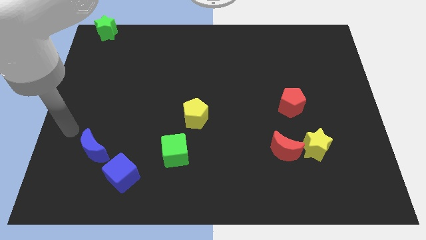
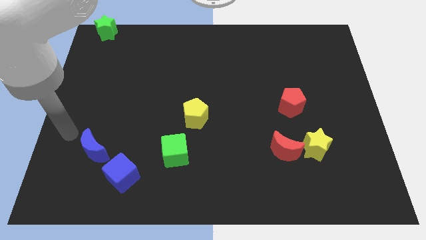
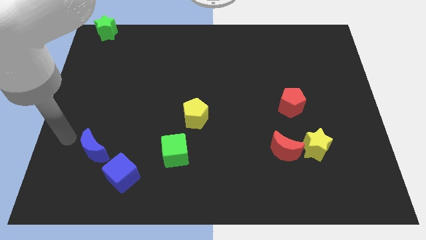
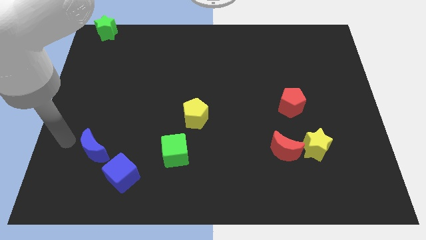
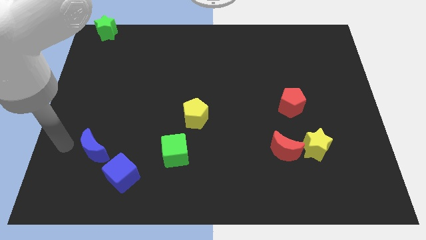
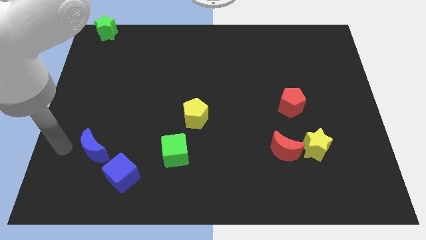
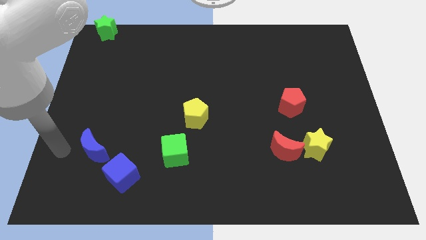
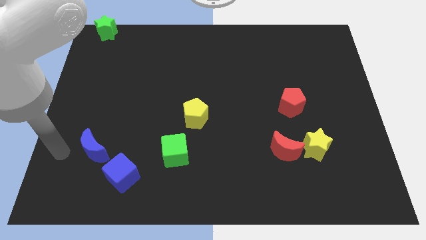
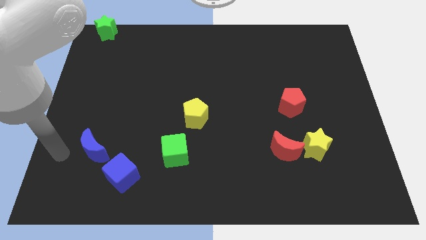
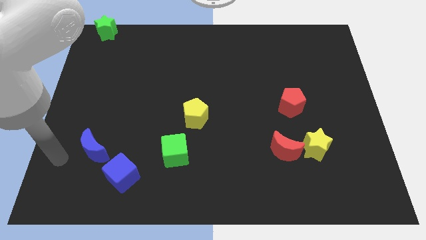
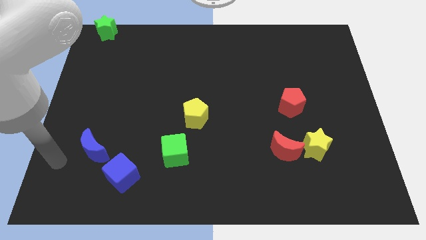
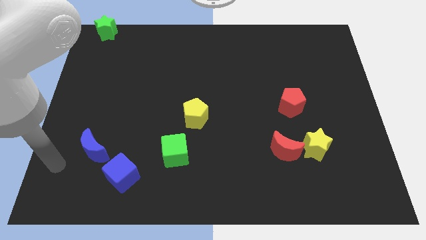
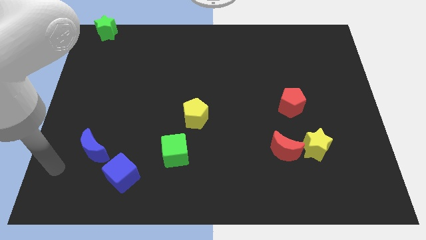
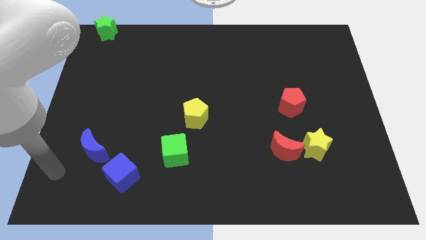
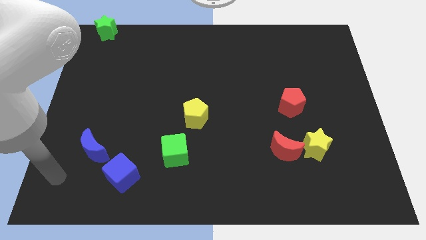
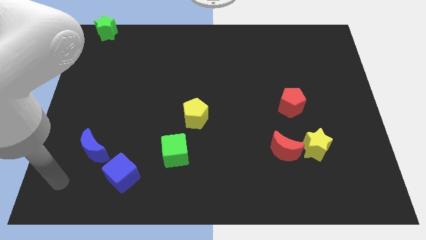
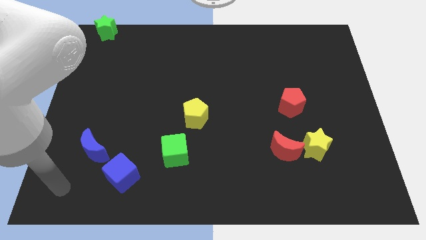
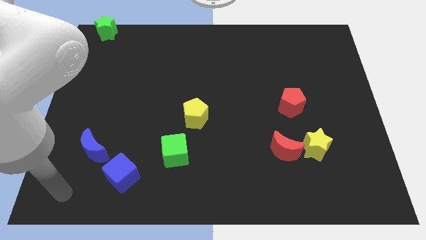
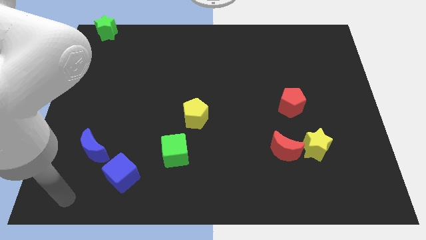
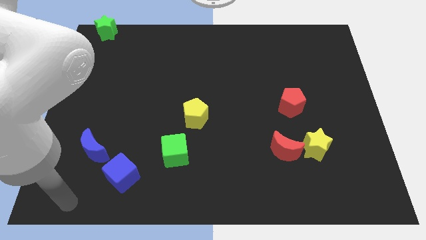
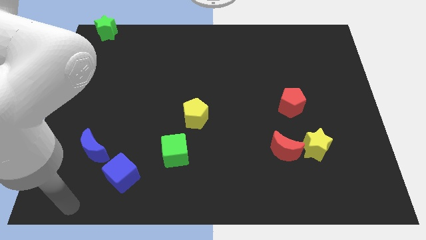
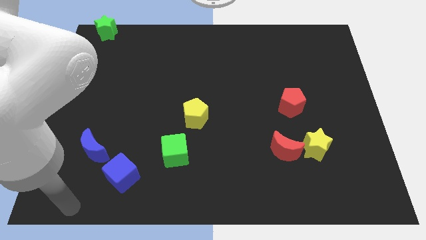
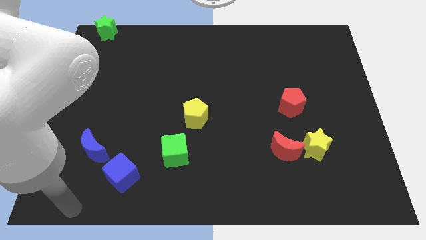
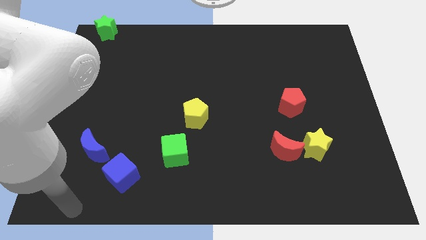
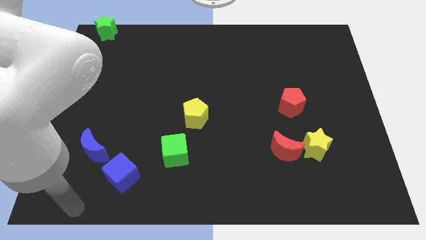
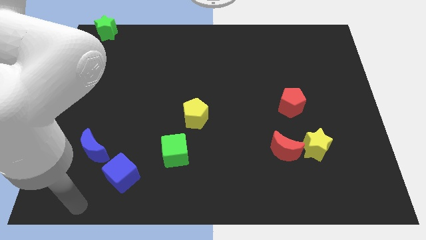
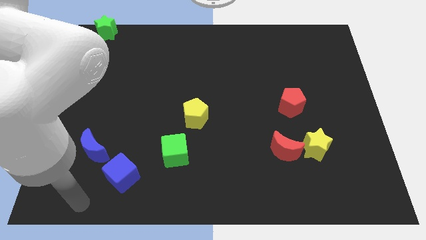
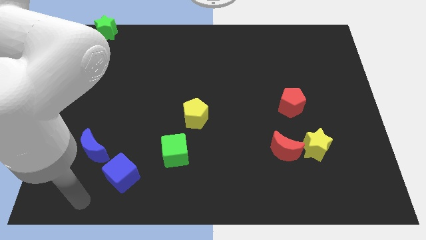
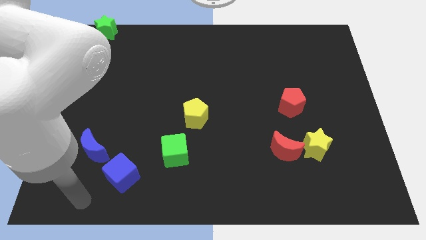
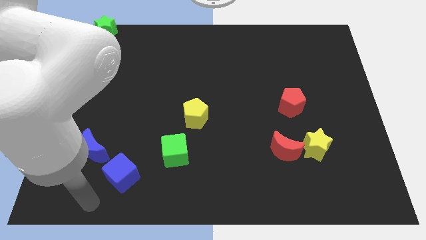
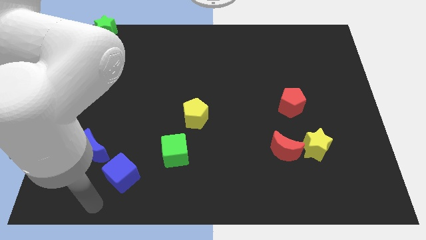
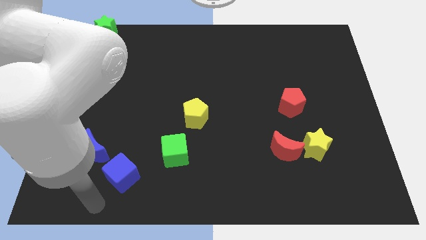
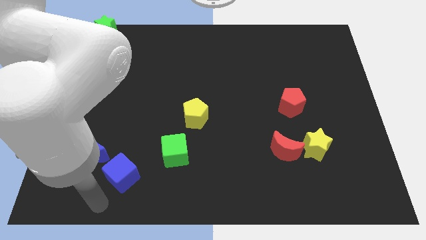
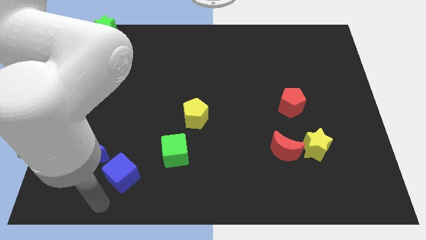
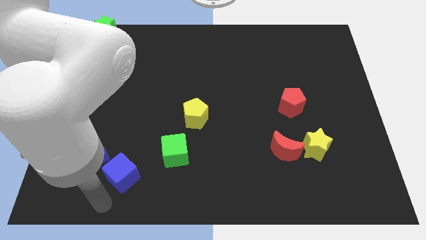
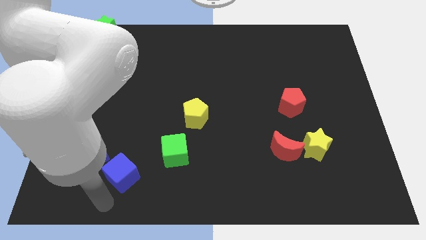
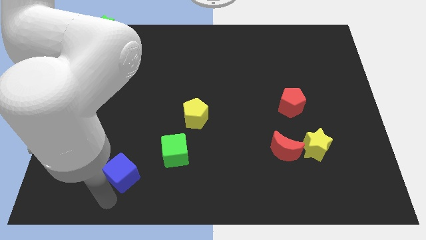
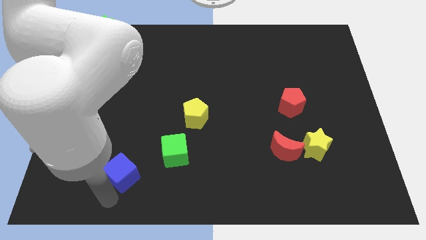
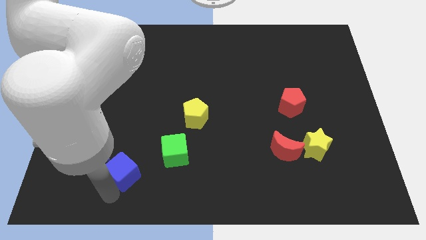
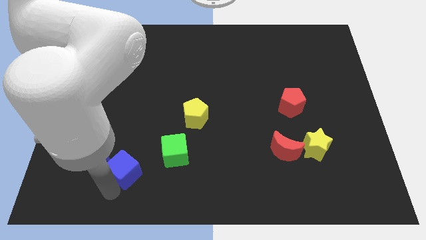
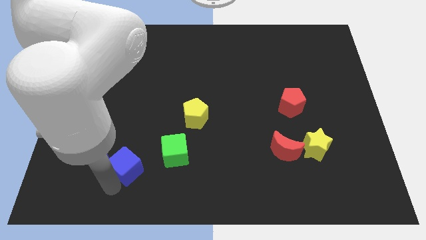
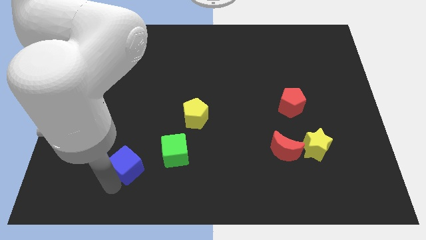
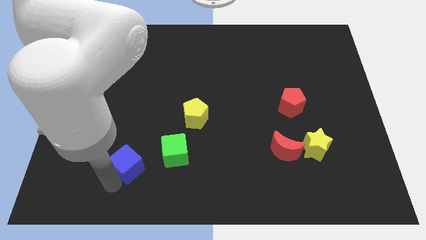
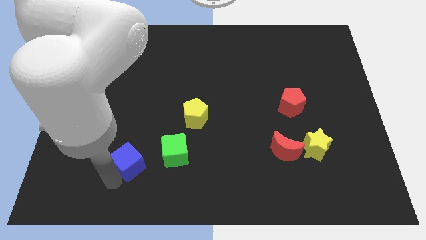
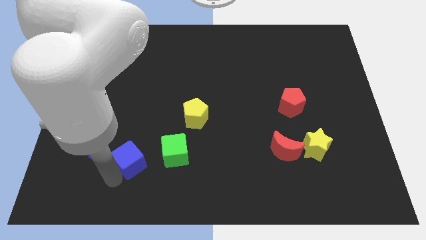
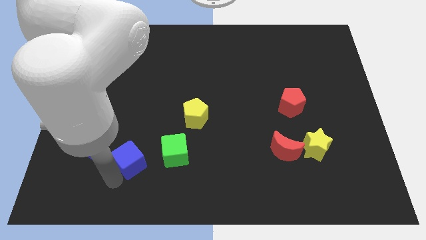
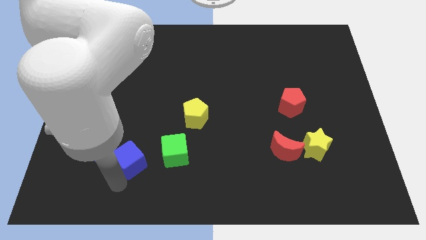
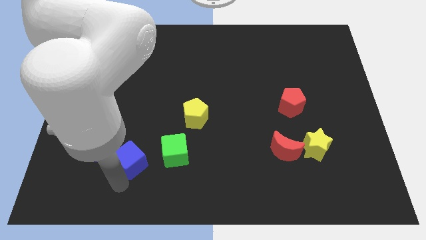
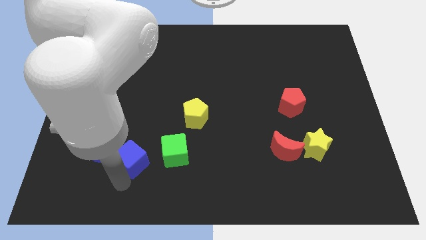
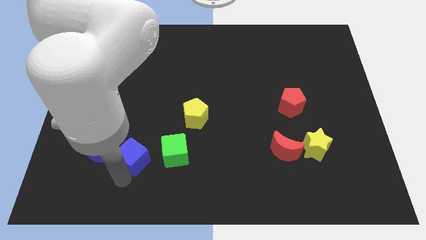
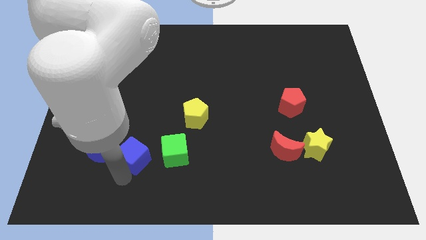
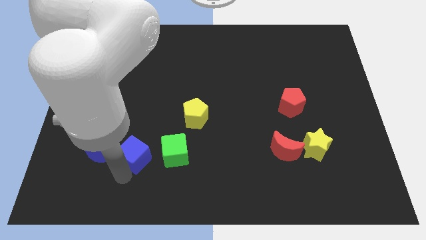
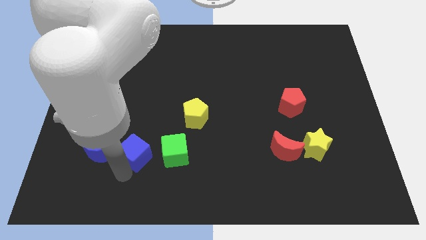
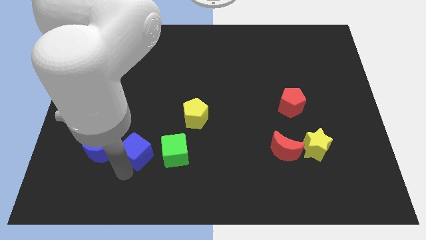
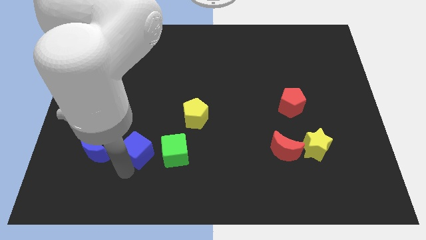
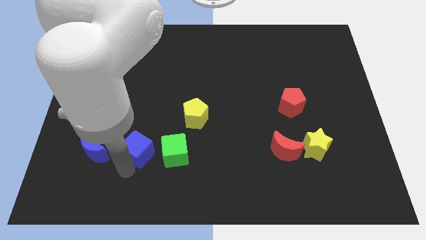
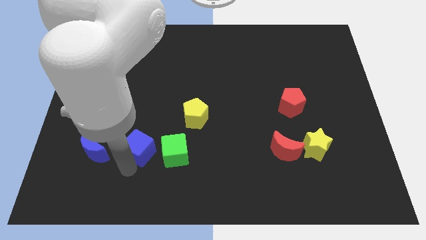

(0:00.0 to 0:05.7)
place the blue cube in between the blue moon and the green cube

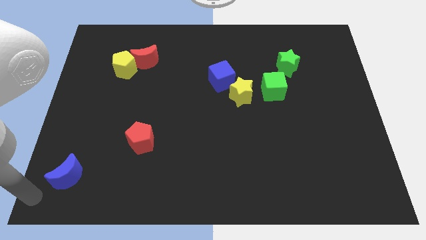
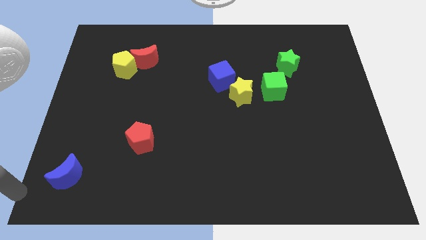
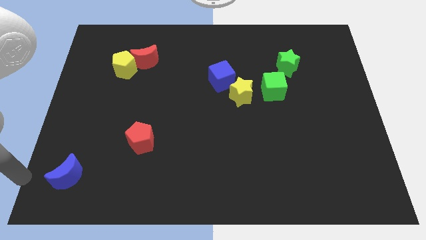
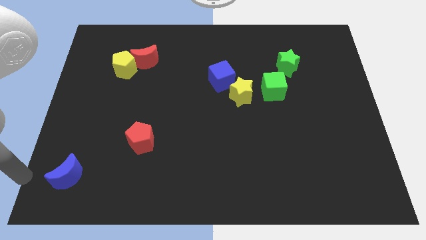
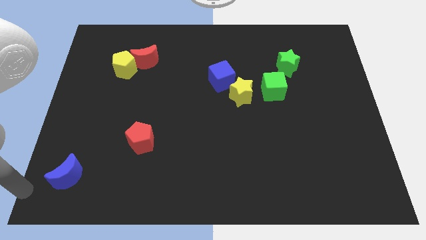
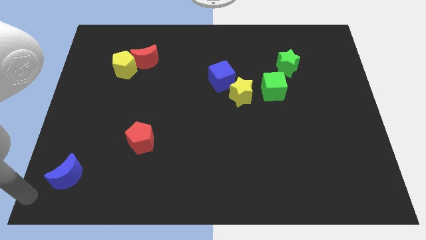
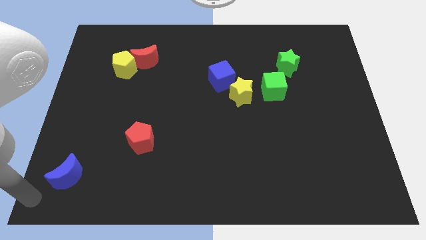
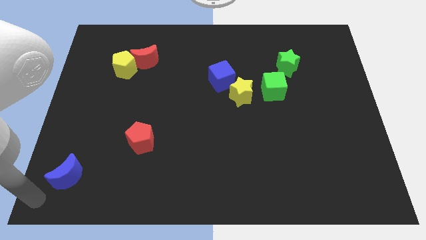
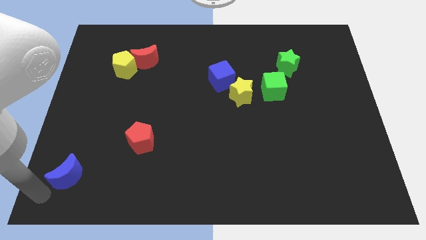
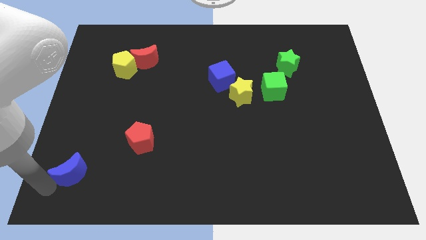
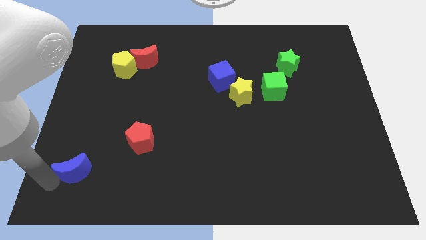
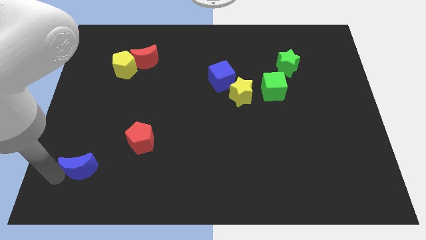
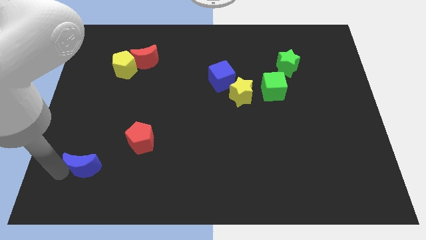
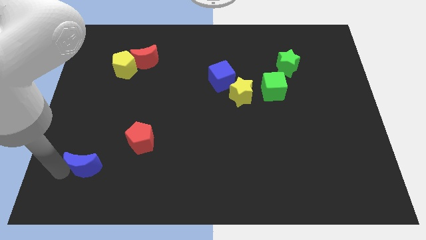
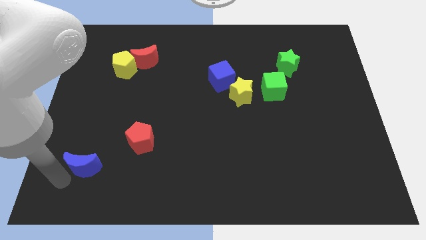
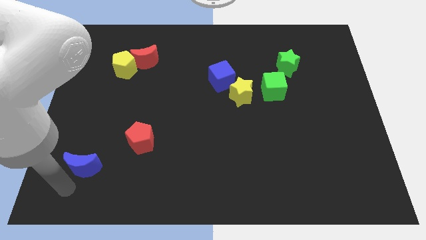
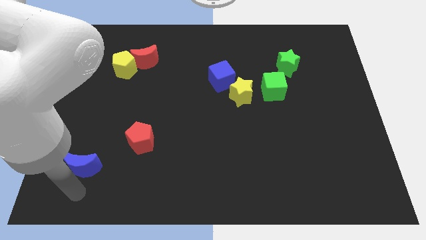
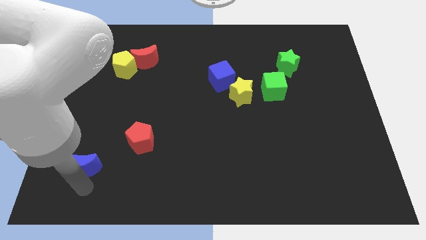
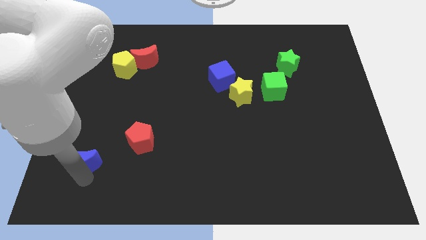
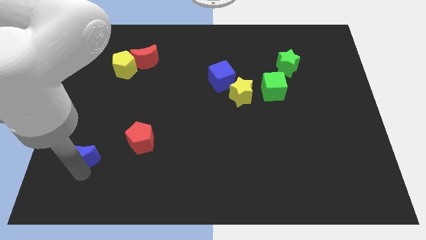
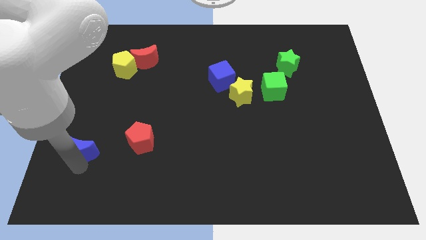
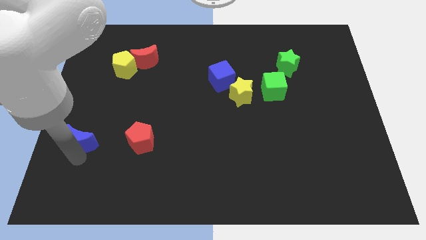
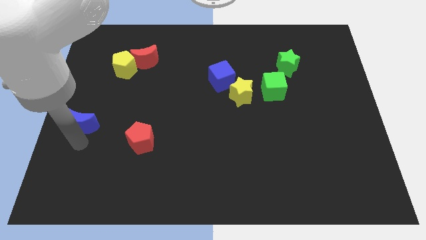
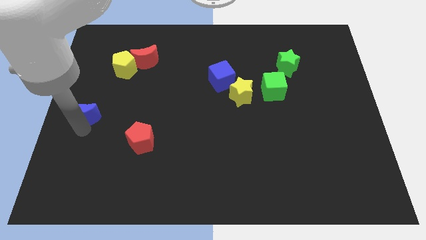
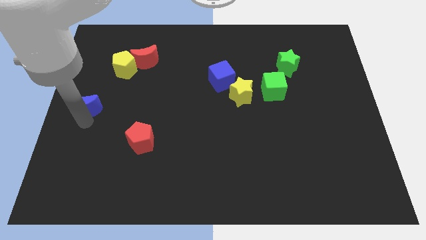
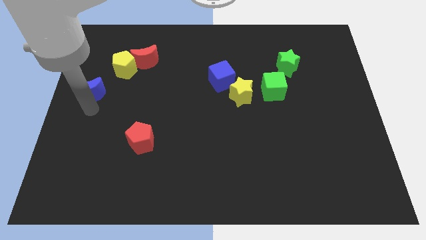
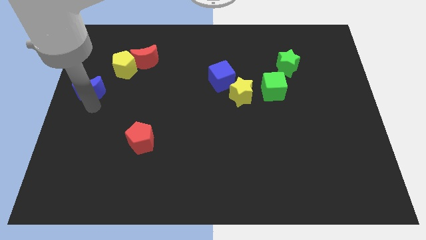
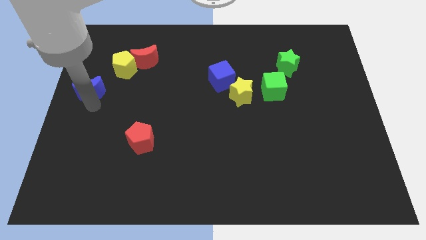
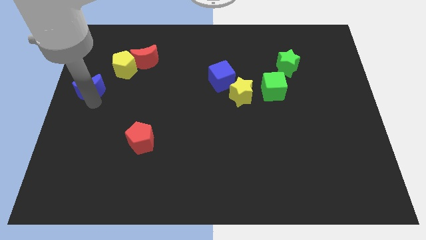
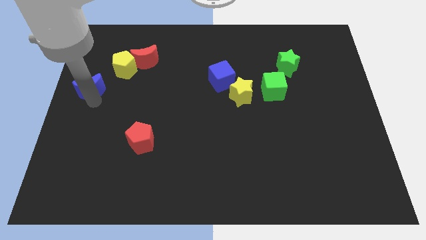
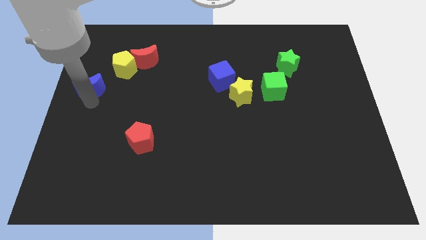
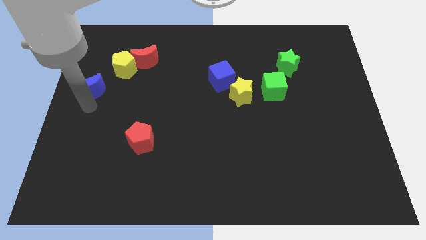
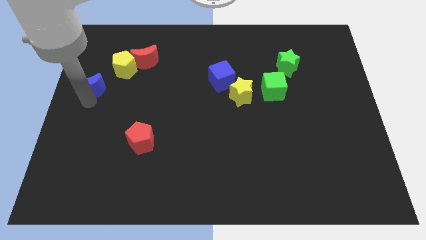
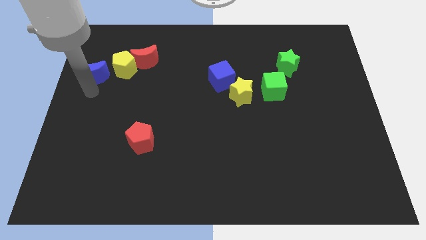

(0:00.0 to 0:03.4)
slide the blue moon diagonally top left to the red pentagon
